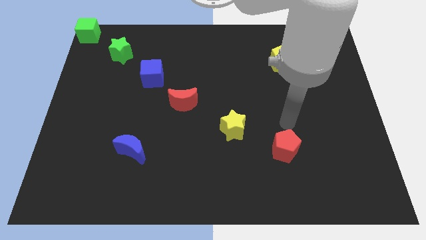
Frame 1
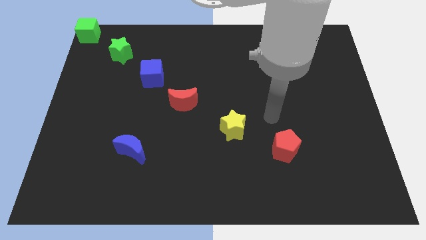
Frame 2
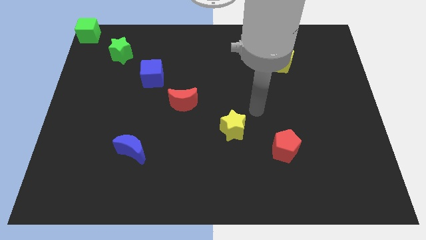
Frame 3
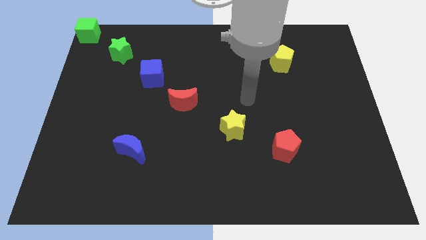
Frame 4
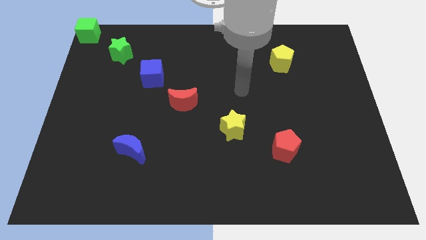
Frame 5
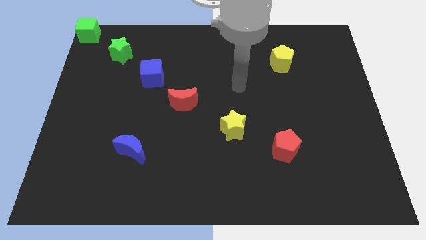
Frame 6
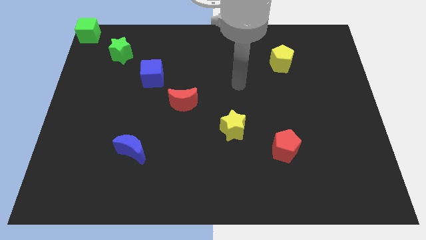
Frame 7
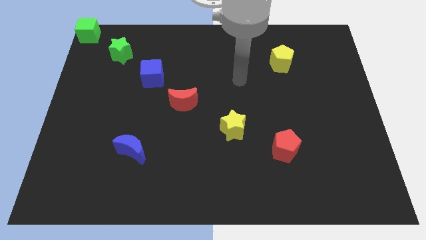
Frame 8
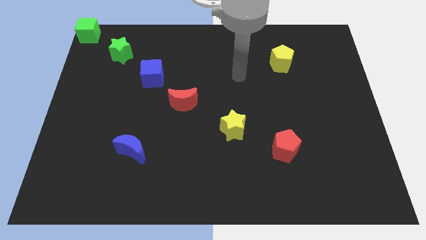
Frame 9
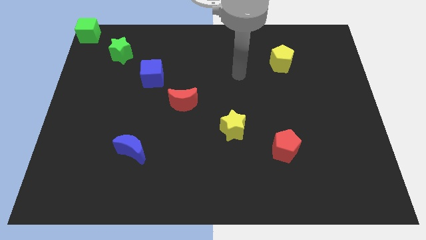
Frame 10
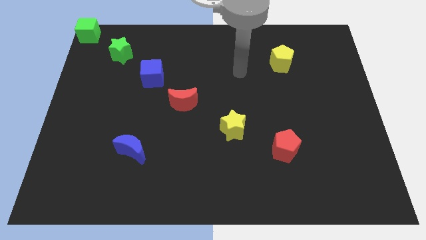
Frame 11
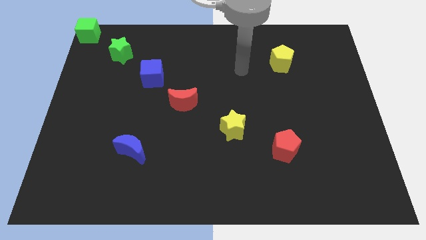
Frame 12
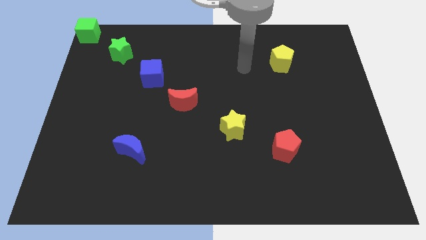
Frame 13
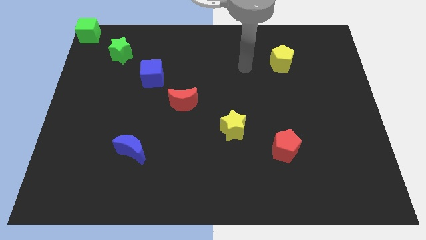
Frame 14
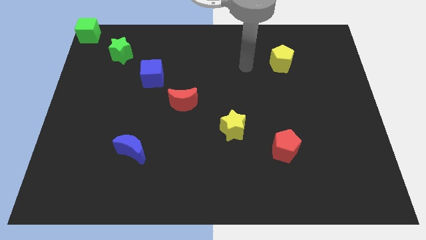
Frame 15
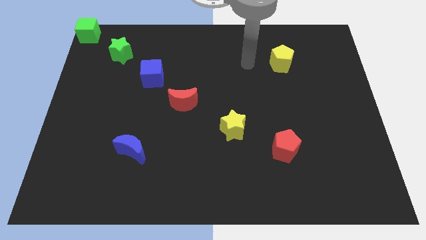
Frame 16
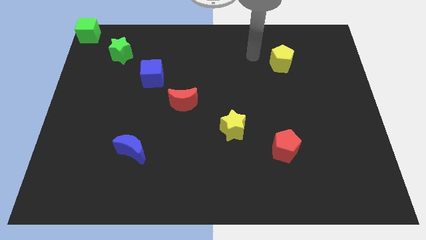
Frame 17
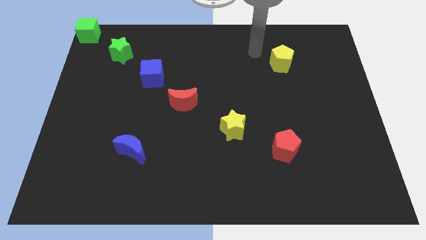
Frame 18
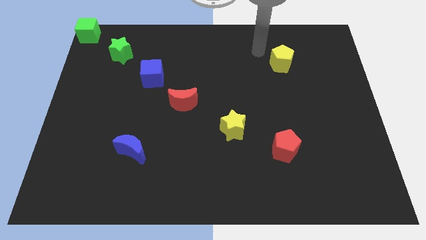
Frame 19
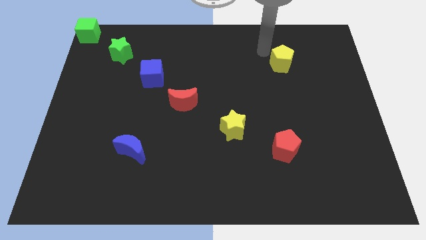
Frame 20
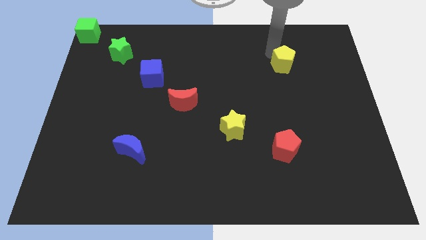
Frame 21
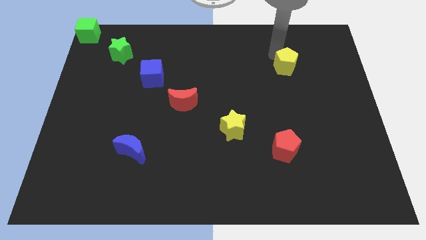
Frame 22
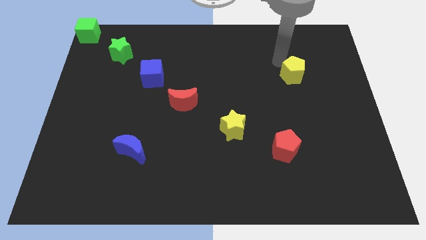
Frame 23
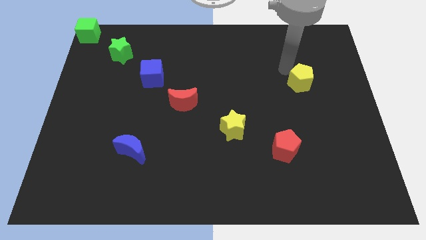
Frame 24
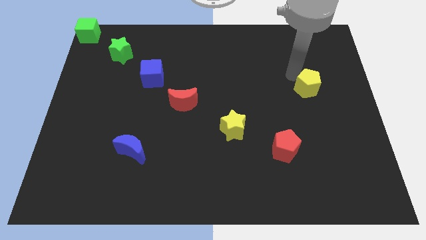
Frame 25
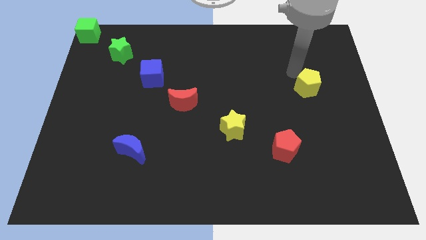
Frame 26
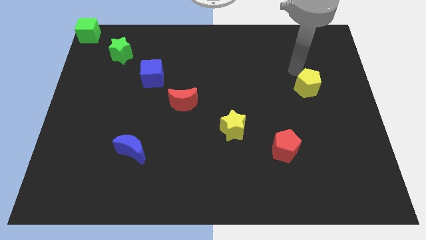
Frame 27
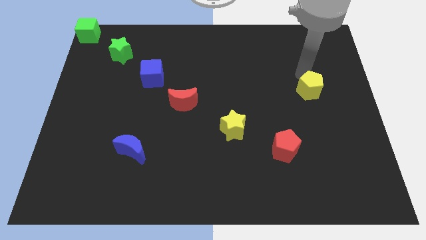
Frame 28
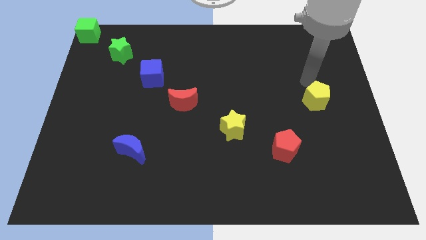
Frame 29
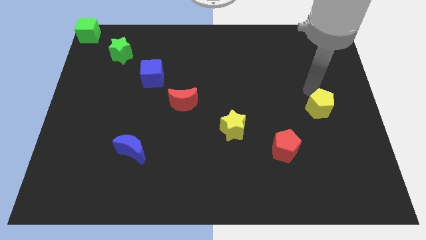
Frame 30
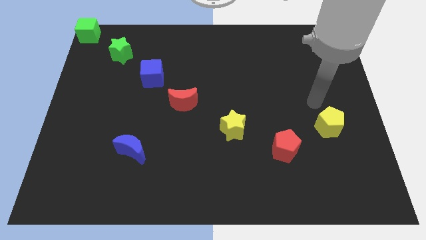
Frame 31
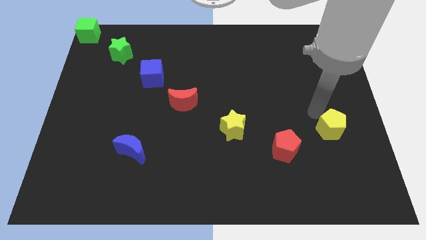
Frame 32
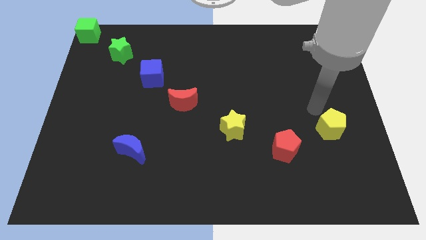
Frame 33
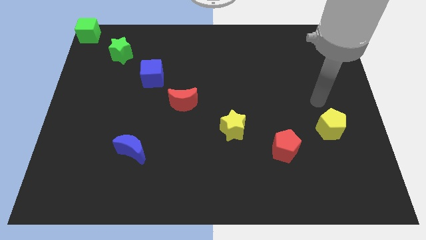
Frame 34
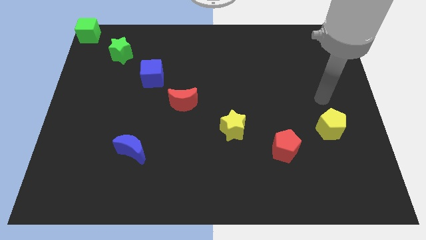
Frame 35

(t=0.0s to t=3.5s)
move the yellow pentagon towards right center

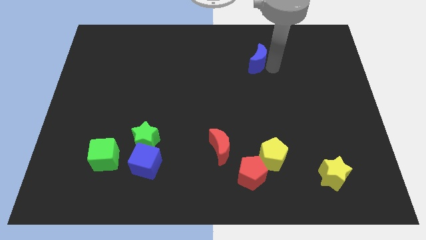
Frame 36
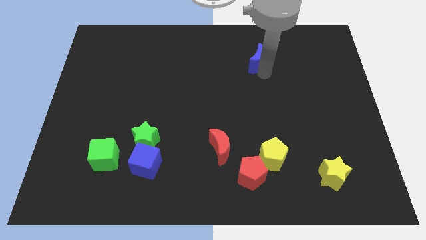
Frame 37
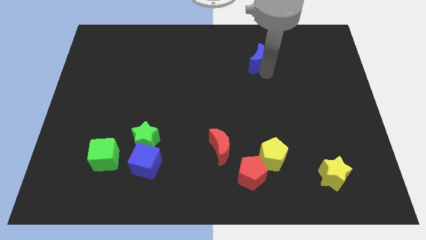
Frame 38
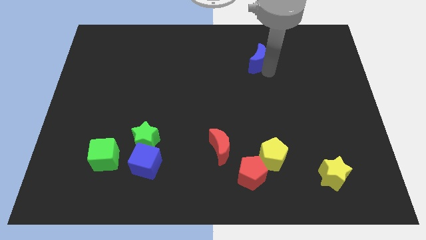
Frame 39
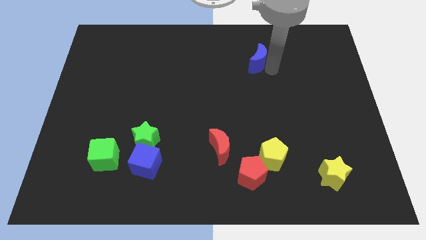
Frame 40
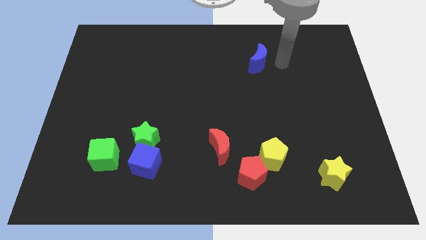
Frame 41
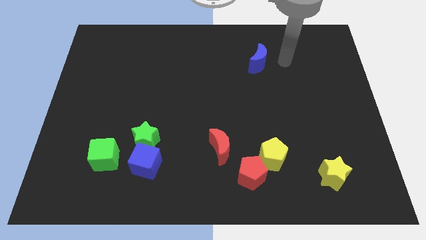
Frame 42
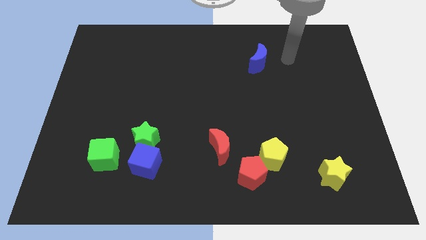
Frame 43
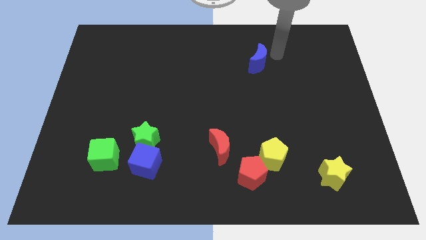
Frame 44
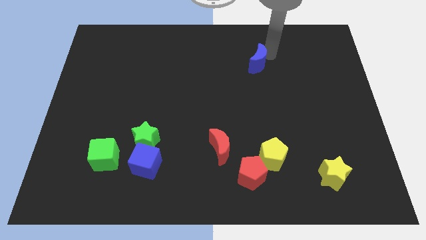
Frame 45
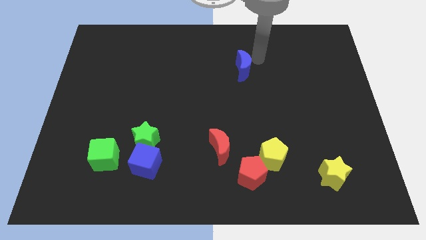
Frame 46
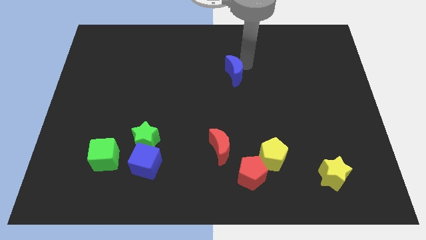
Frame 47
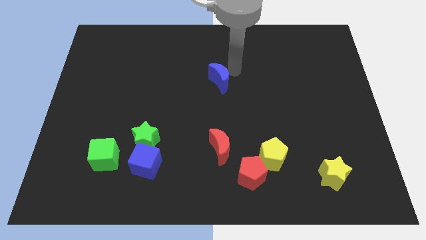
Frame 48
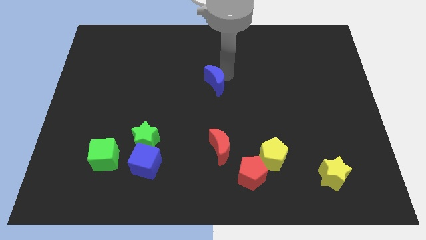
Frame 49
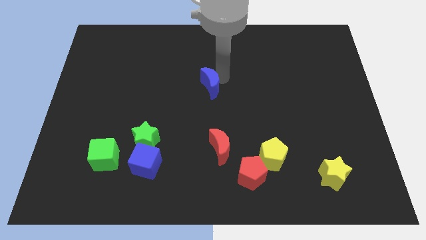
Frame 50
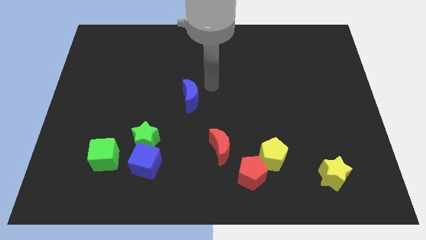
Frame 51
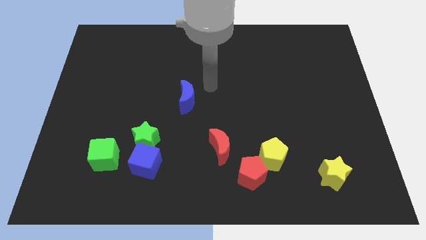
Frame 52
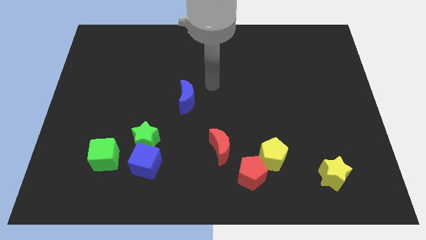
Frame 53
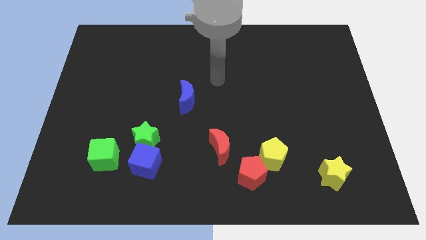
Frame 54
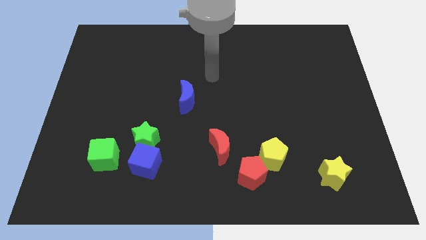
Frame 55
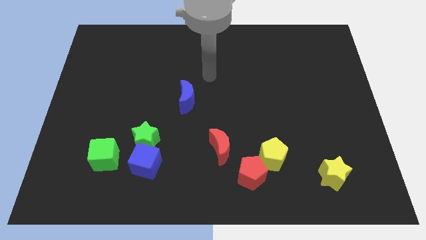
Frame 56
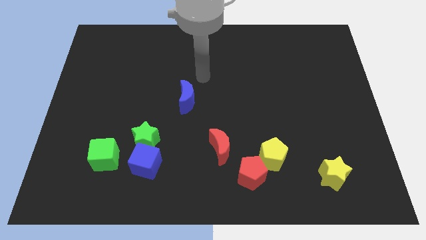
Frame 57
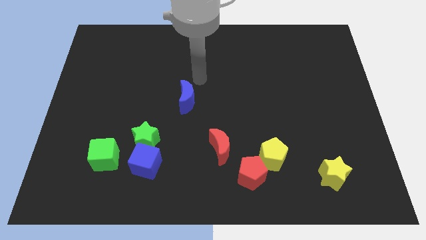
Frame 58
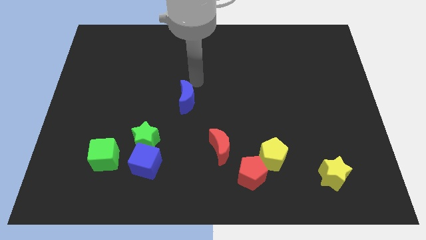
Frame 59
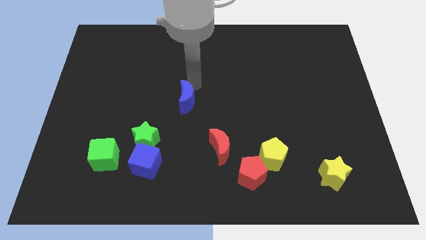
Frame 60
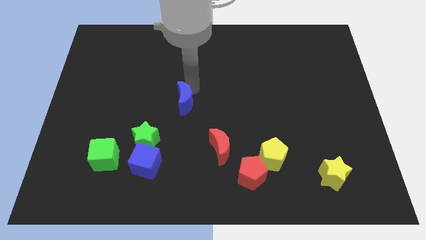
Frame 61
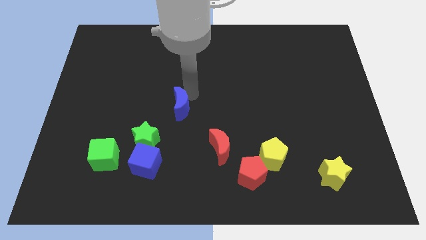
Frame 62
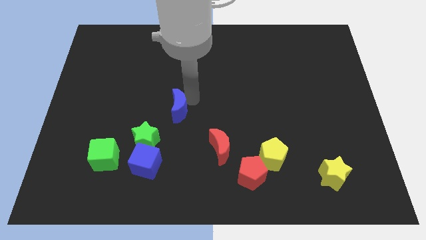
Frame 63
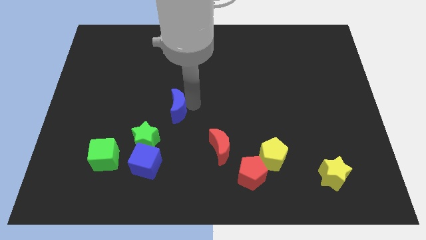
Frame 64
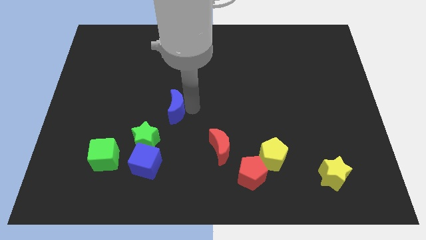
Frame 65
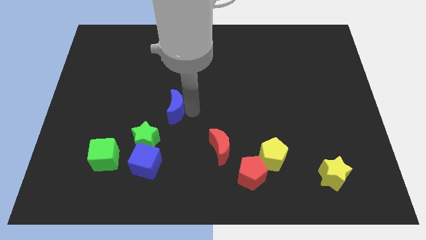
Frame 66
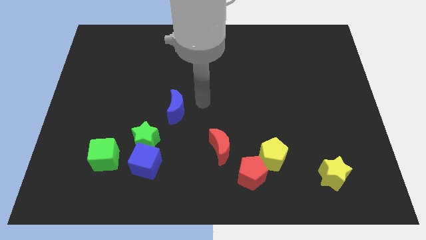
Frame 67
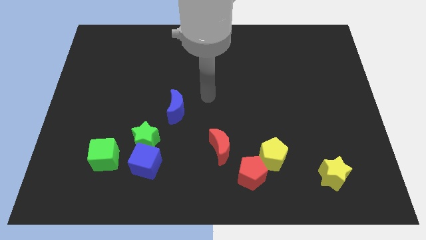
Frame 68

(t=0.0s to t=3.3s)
move the blue crescent towards the green star

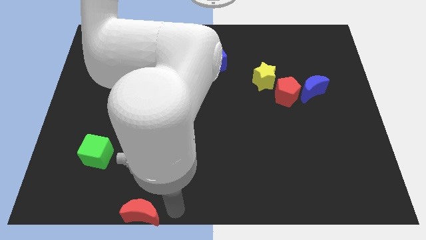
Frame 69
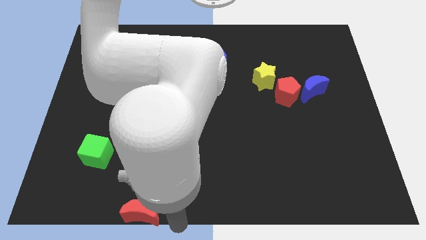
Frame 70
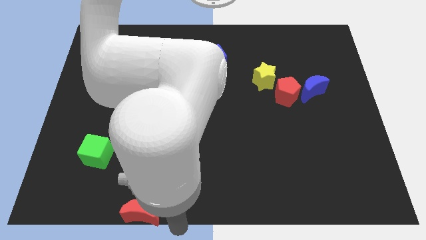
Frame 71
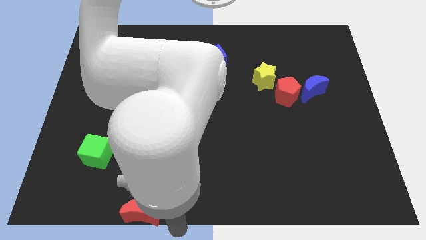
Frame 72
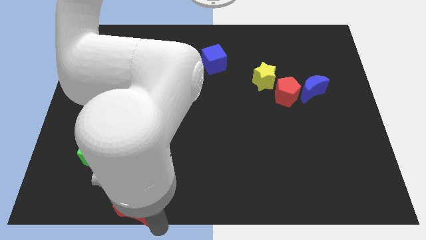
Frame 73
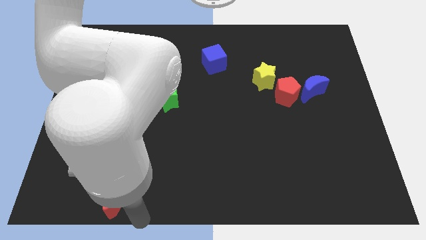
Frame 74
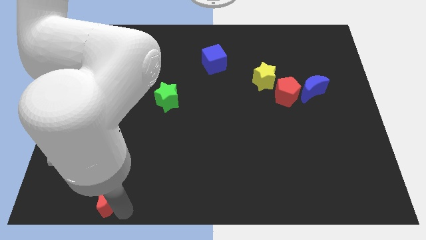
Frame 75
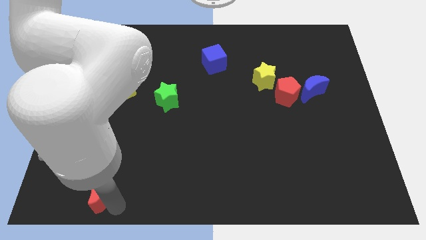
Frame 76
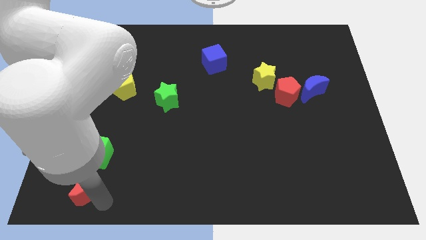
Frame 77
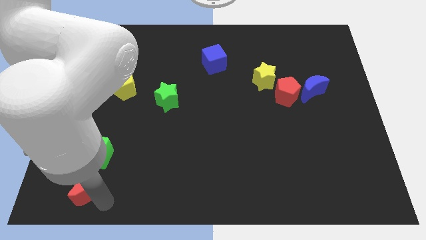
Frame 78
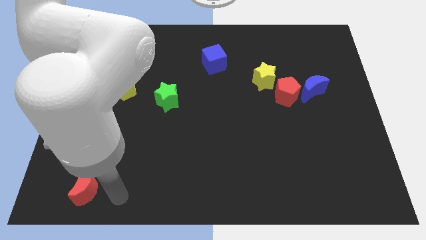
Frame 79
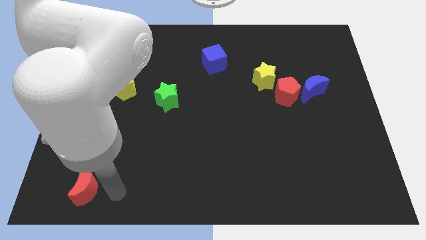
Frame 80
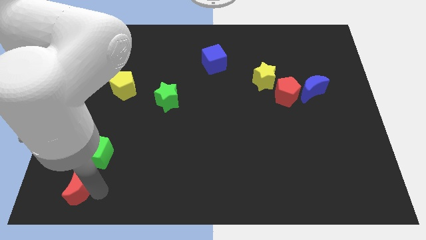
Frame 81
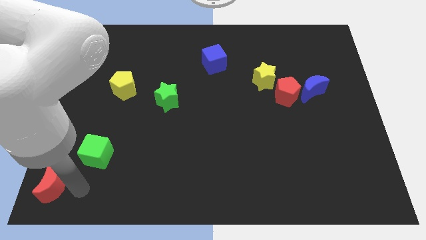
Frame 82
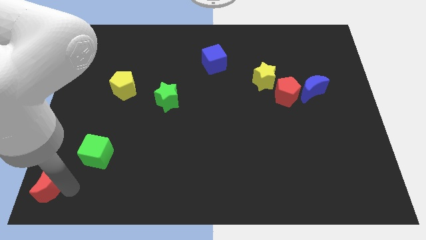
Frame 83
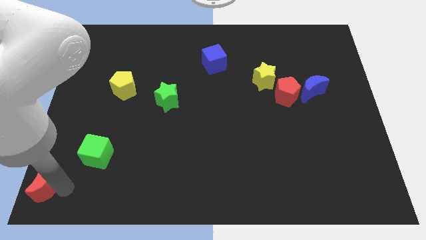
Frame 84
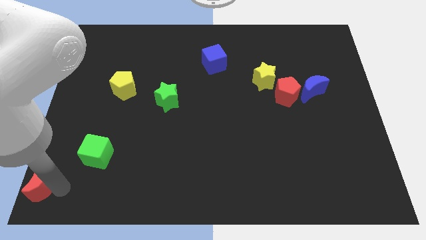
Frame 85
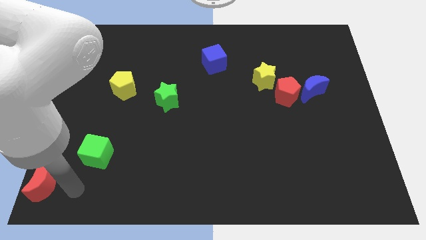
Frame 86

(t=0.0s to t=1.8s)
push the red crescent to the bottom left corner of the board

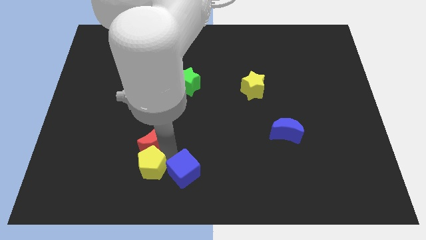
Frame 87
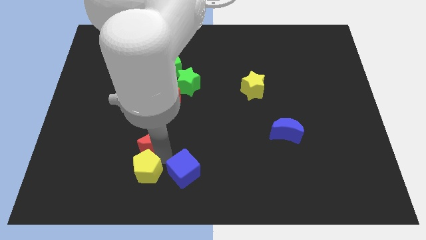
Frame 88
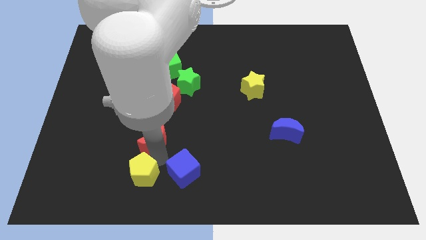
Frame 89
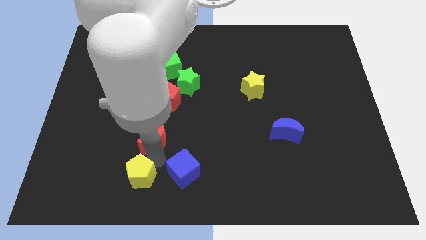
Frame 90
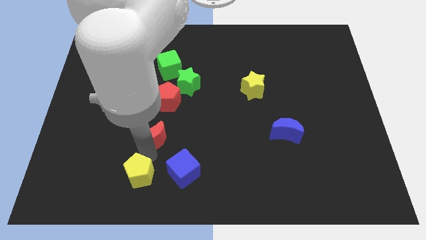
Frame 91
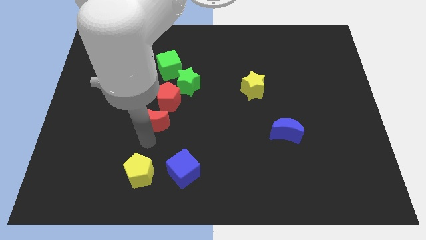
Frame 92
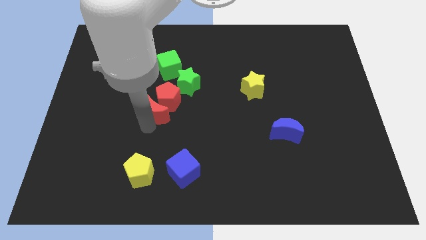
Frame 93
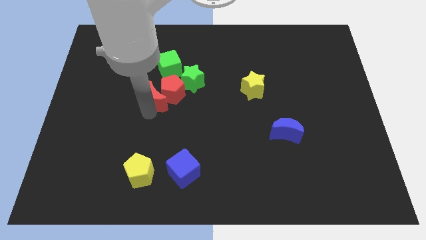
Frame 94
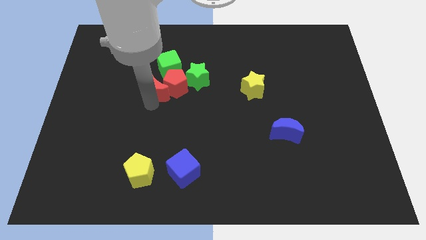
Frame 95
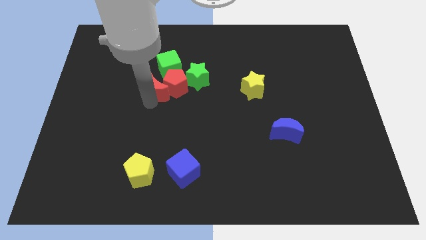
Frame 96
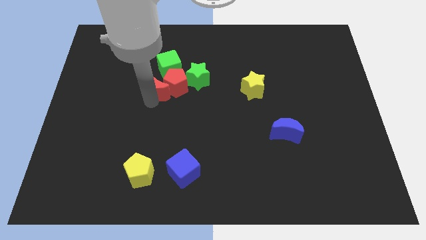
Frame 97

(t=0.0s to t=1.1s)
push red crescent into red pentagon
